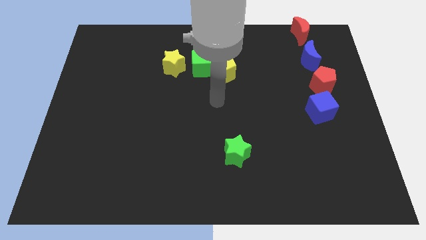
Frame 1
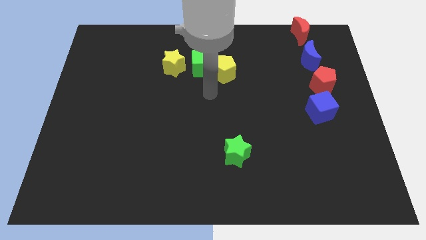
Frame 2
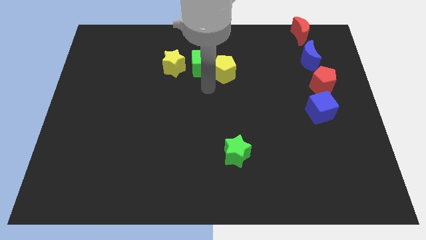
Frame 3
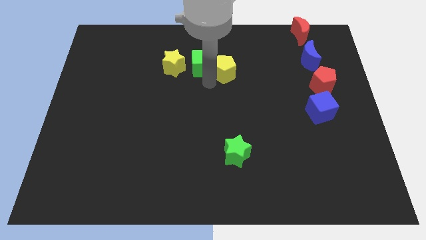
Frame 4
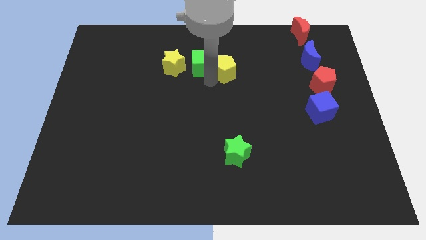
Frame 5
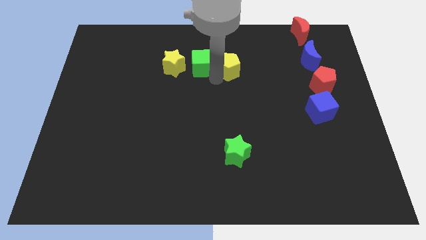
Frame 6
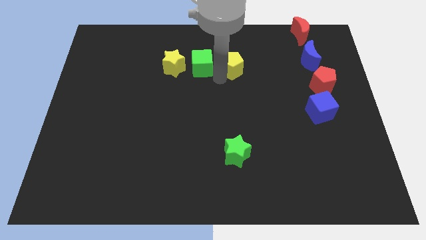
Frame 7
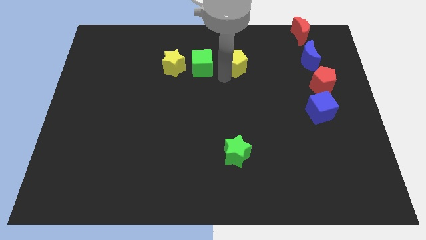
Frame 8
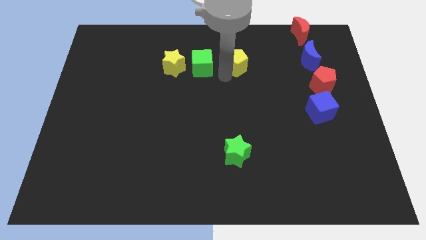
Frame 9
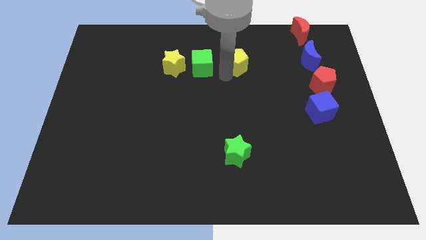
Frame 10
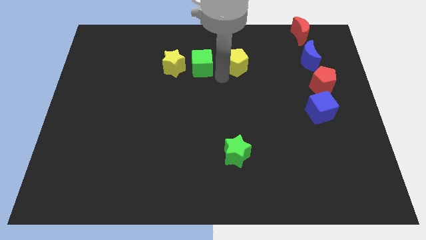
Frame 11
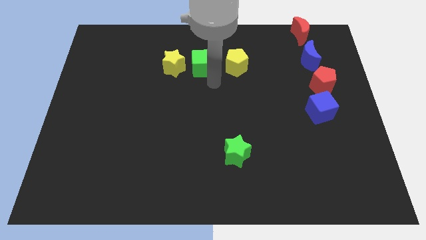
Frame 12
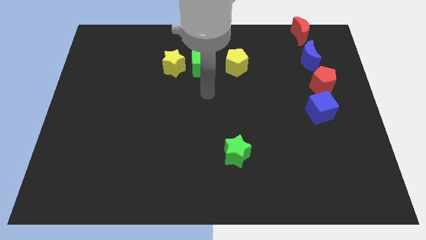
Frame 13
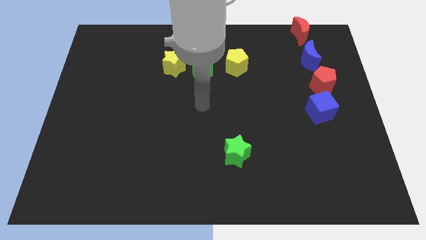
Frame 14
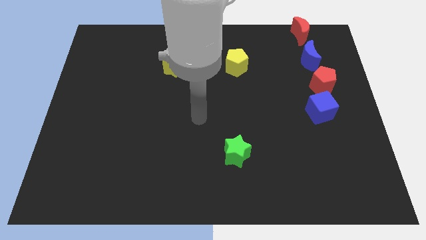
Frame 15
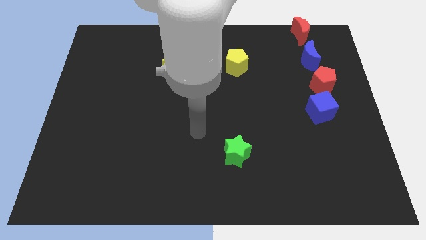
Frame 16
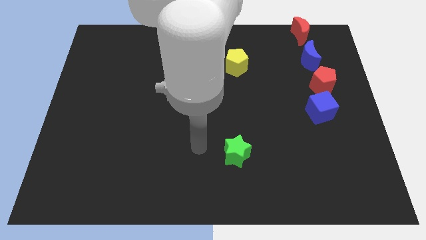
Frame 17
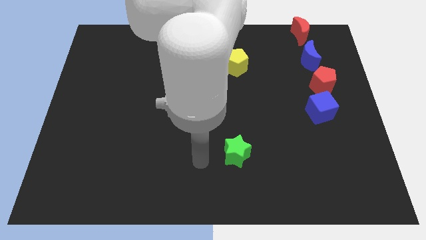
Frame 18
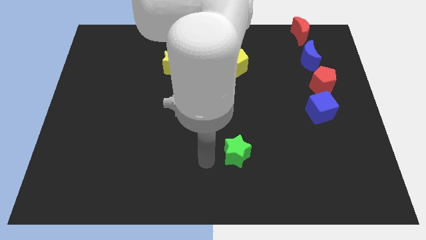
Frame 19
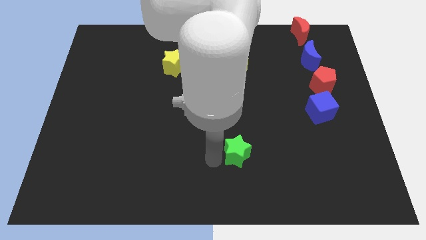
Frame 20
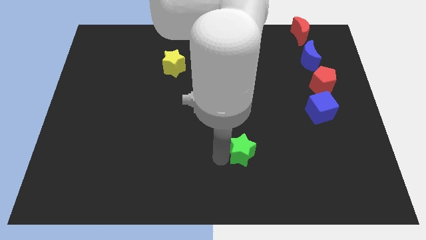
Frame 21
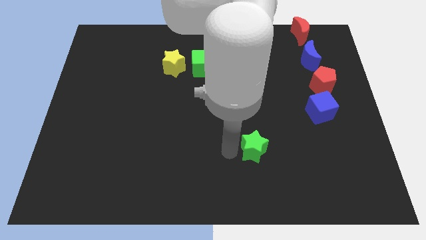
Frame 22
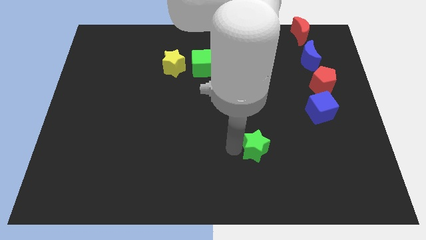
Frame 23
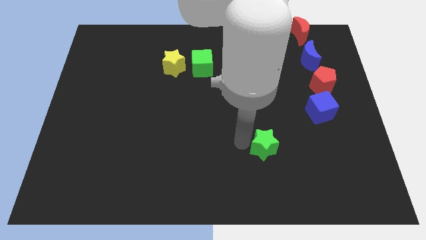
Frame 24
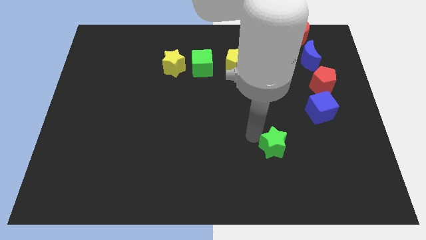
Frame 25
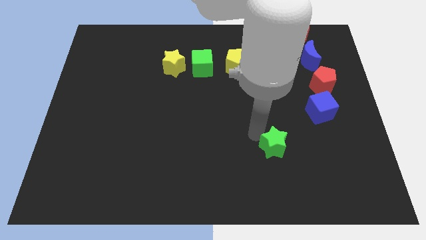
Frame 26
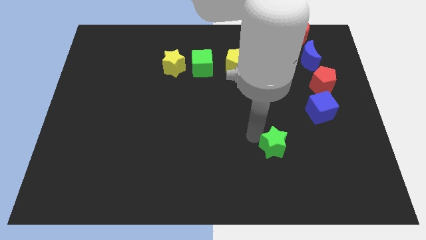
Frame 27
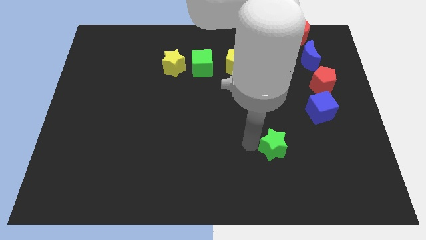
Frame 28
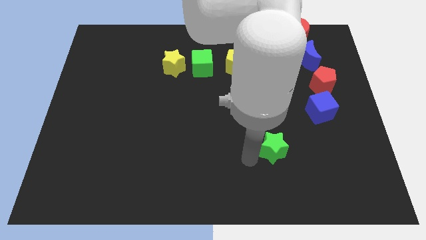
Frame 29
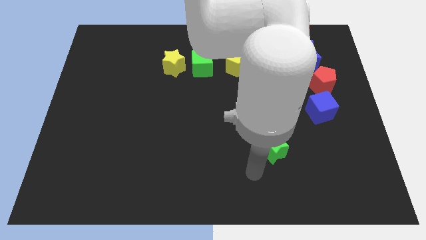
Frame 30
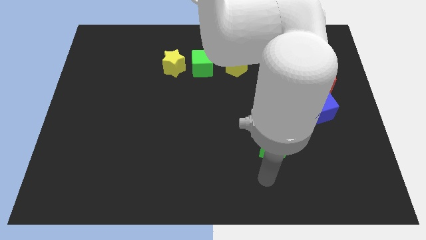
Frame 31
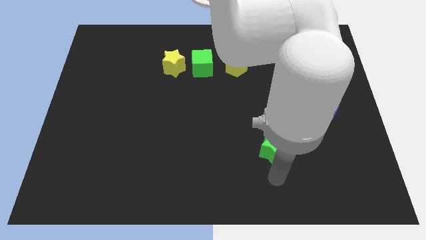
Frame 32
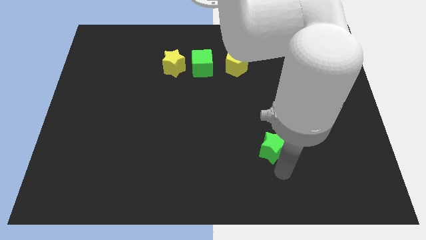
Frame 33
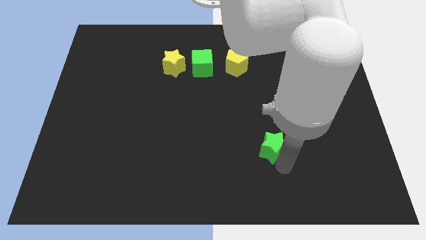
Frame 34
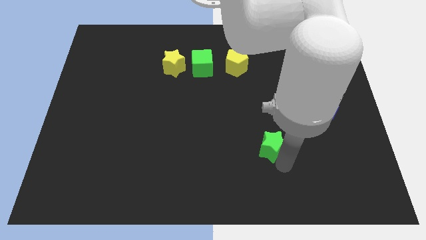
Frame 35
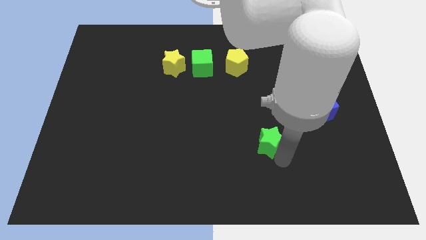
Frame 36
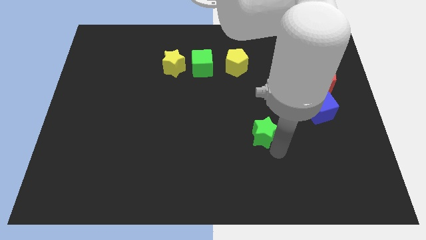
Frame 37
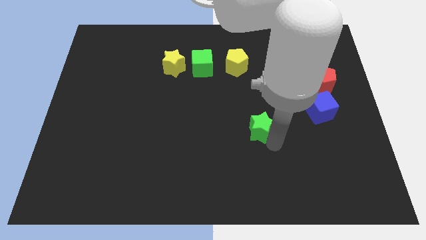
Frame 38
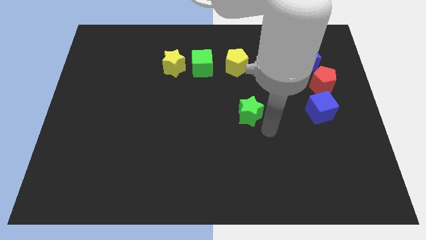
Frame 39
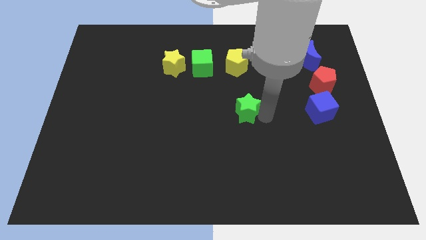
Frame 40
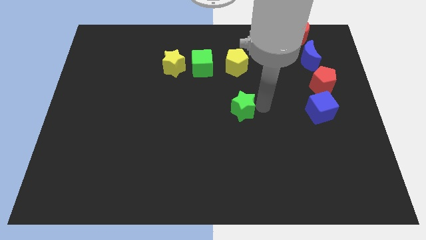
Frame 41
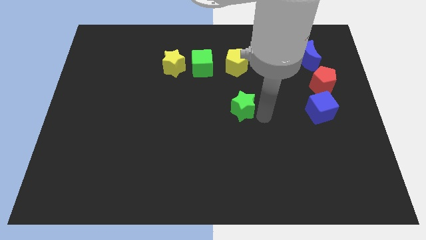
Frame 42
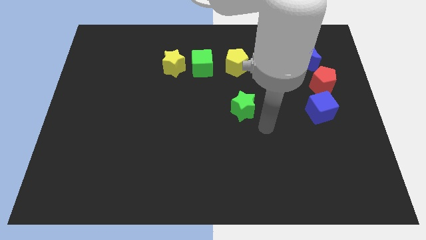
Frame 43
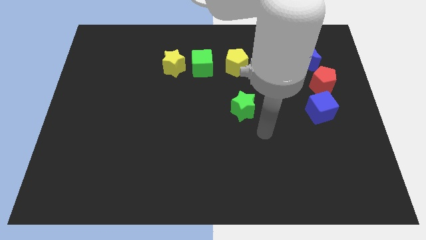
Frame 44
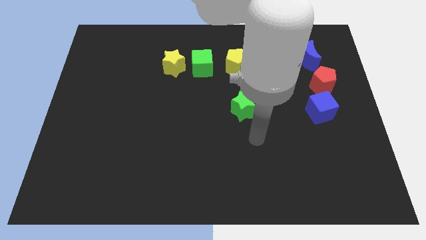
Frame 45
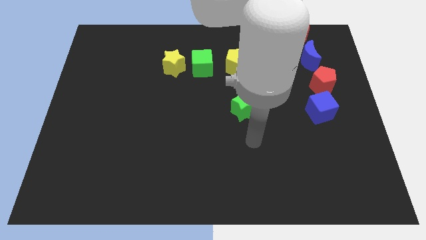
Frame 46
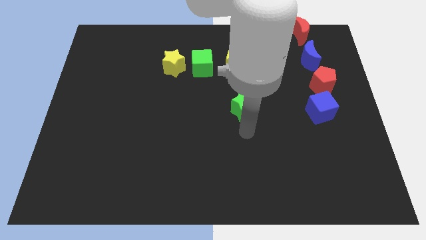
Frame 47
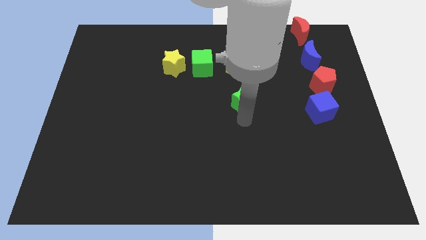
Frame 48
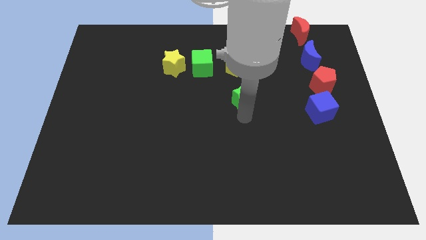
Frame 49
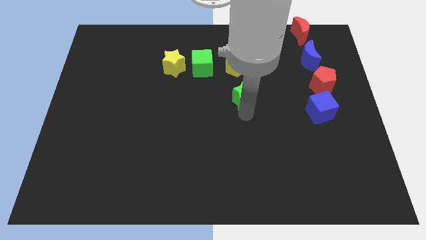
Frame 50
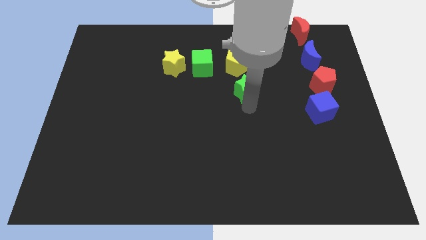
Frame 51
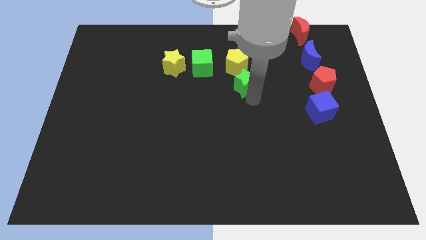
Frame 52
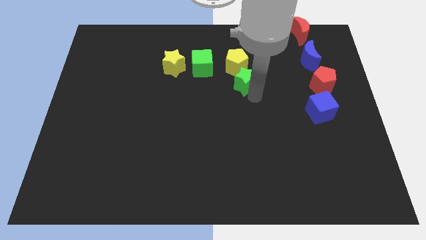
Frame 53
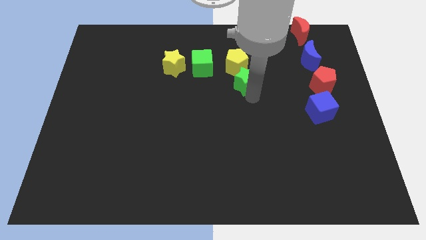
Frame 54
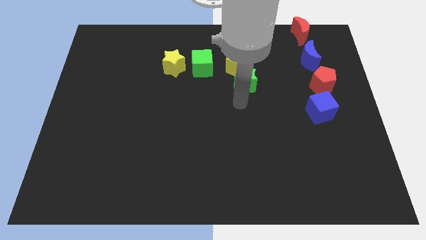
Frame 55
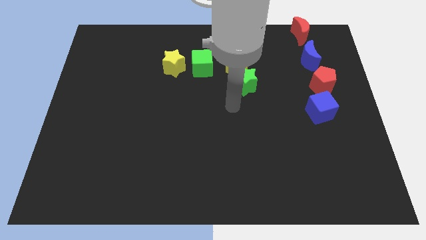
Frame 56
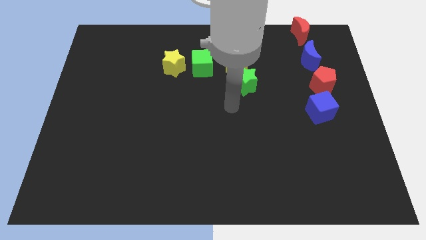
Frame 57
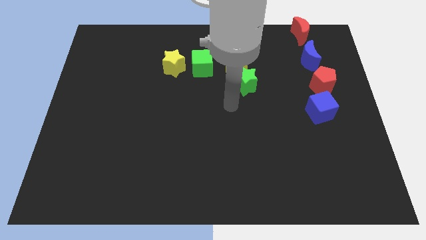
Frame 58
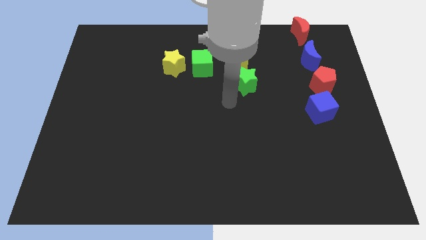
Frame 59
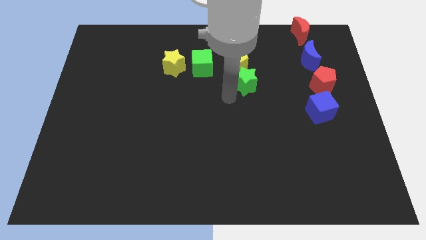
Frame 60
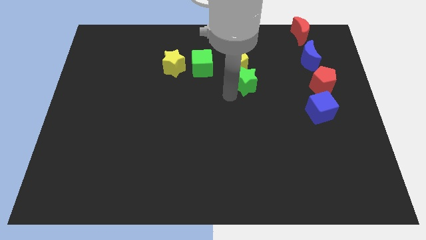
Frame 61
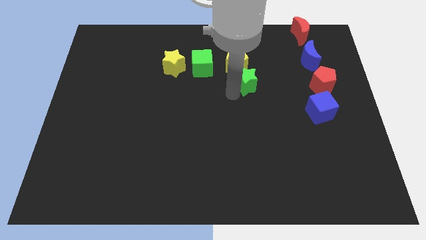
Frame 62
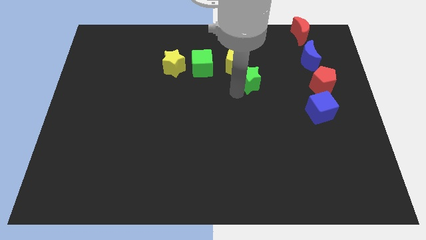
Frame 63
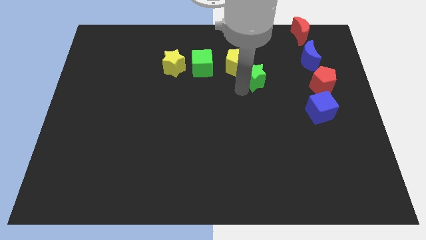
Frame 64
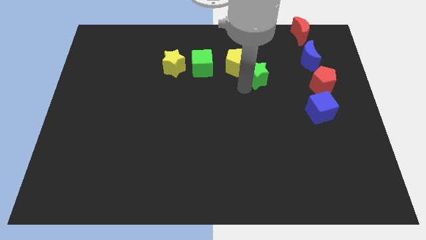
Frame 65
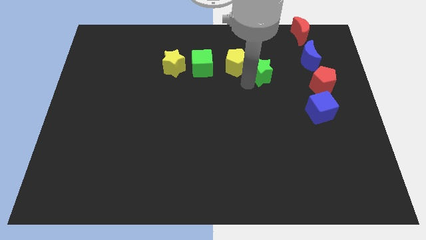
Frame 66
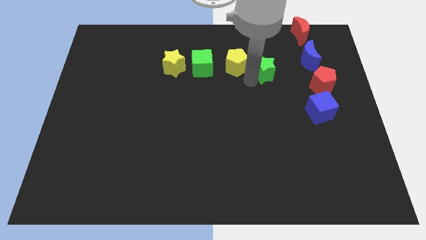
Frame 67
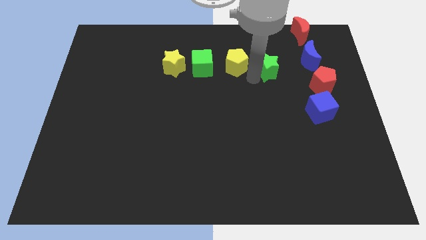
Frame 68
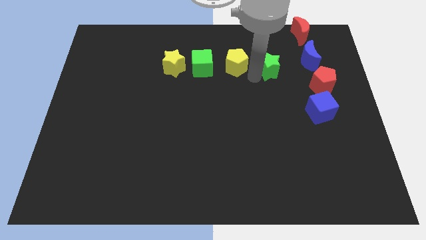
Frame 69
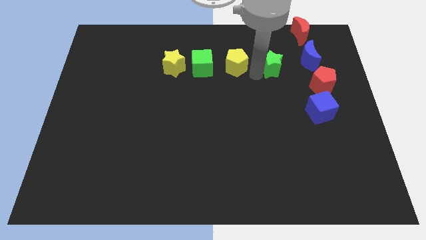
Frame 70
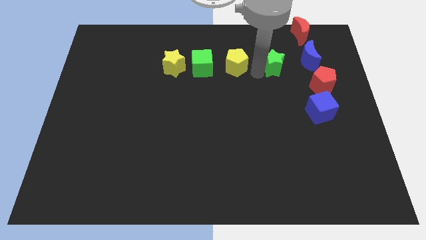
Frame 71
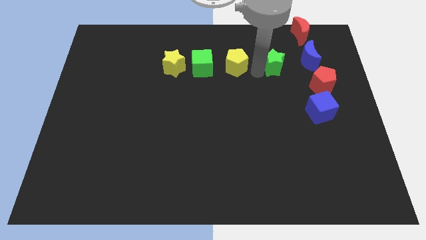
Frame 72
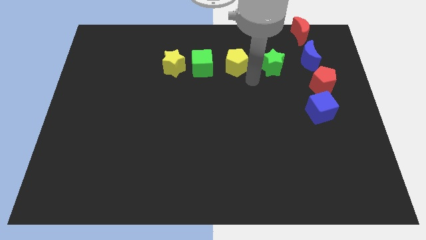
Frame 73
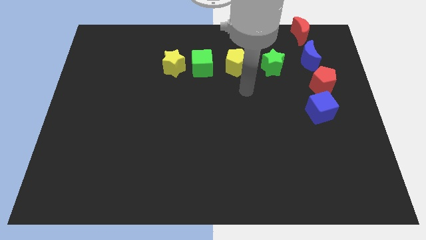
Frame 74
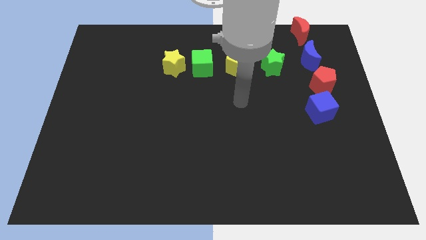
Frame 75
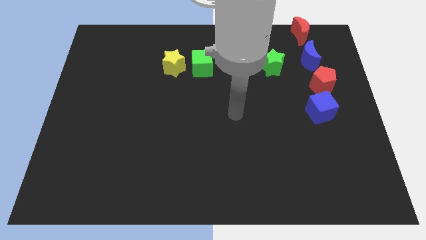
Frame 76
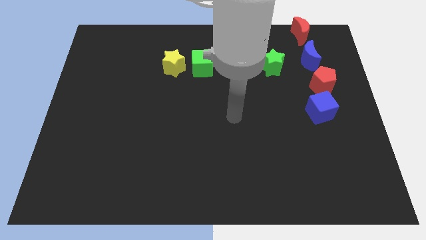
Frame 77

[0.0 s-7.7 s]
move the green star right beside the yellow pentagon

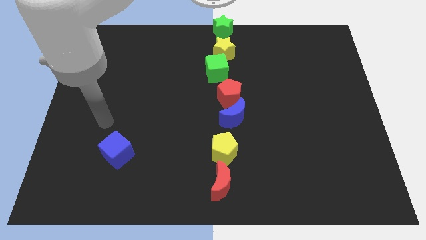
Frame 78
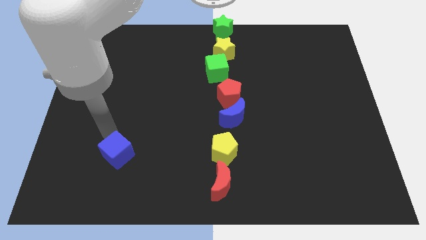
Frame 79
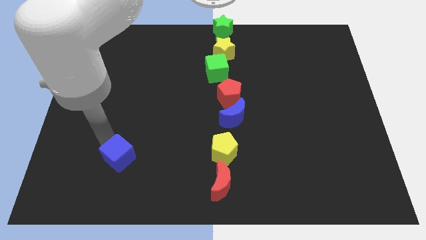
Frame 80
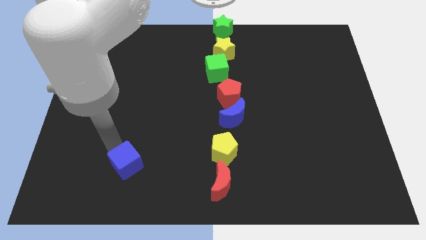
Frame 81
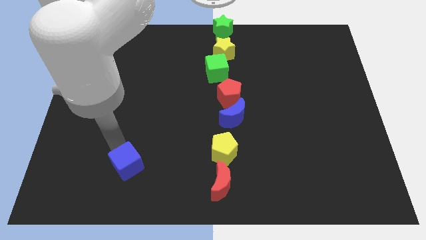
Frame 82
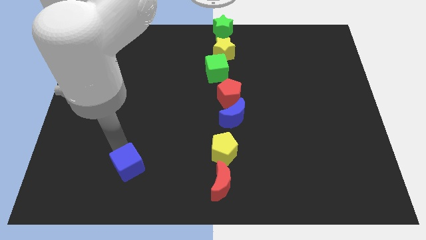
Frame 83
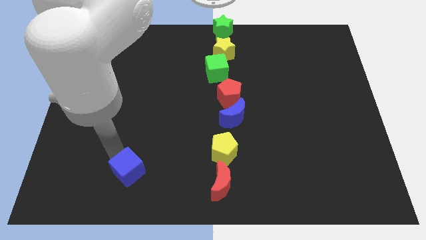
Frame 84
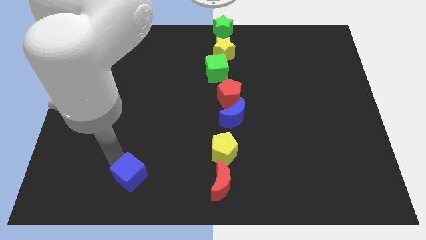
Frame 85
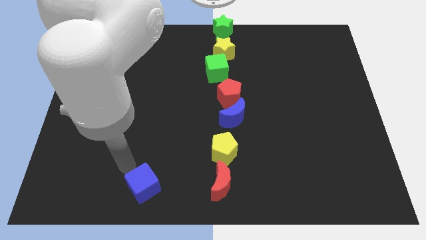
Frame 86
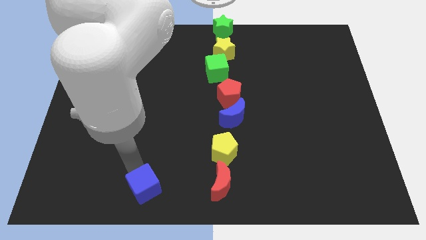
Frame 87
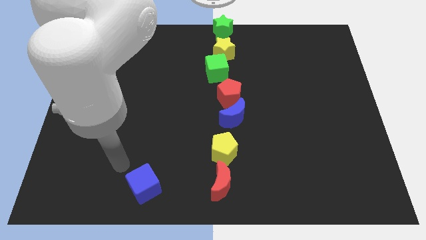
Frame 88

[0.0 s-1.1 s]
push the blue block downward

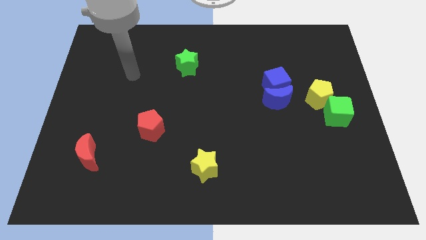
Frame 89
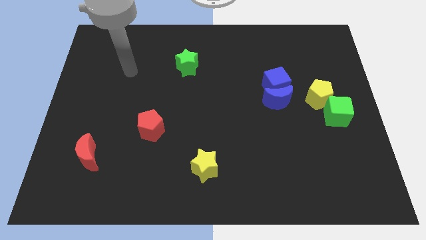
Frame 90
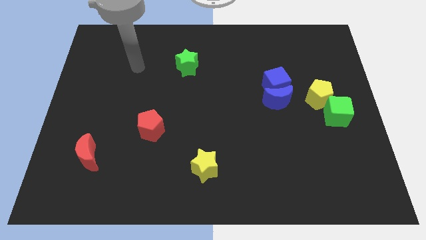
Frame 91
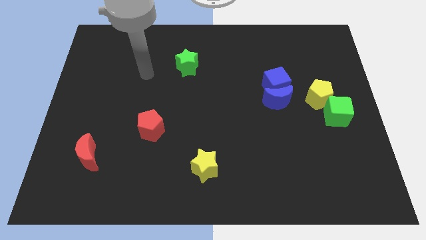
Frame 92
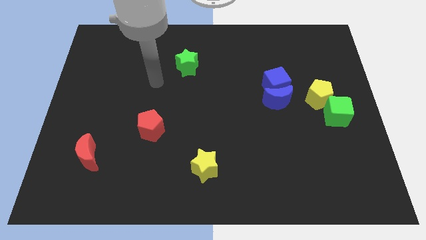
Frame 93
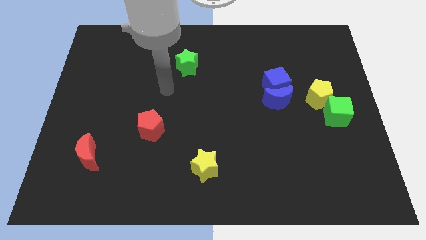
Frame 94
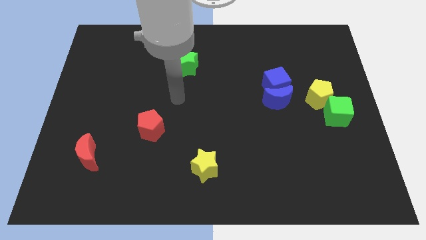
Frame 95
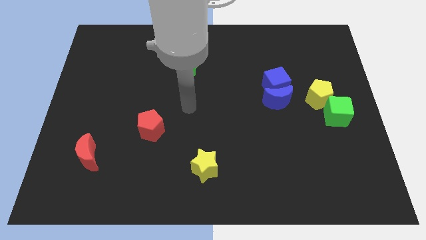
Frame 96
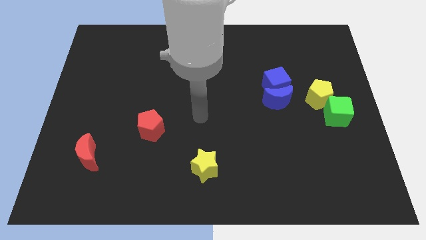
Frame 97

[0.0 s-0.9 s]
place your hand in between the green star and the yellow star
